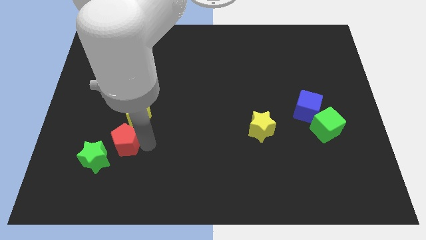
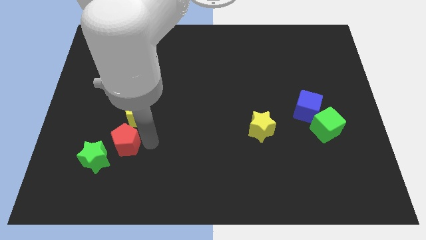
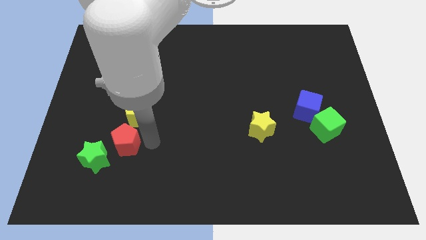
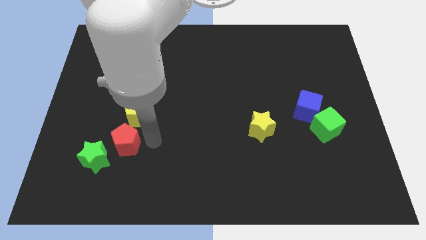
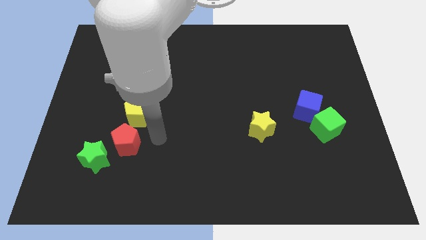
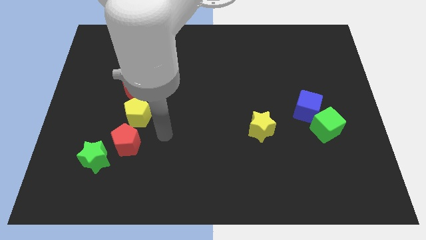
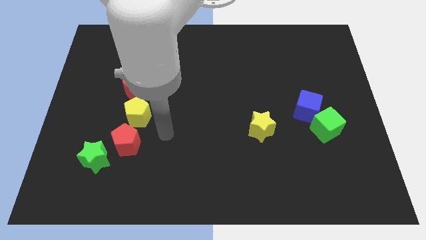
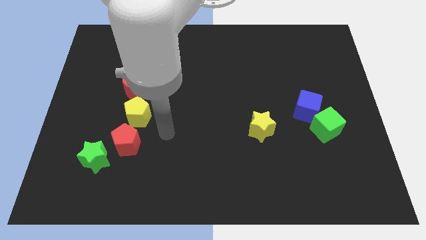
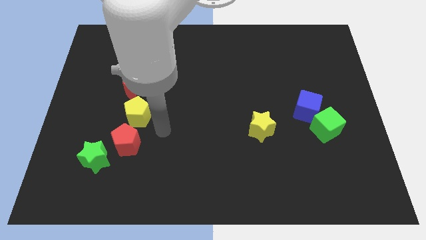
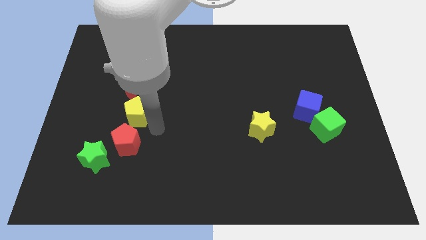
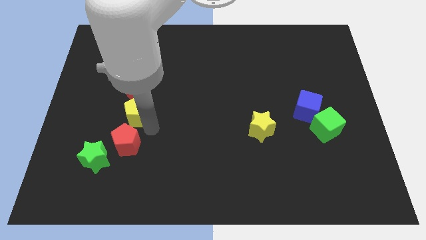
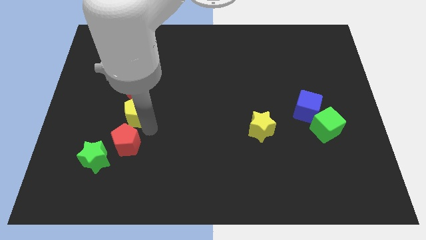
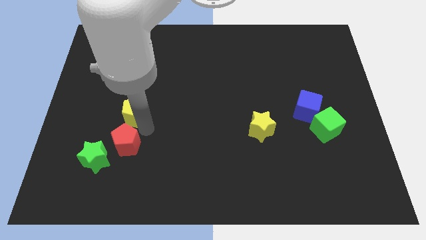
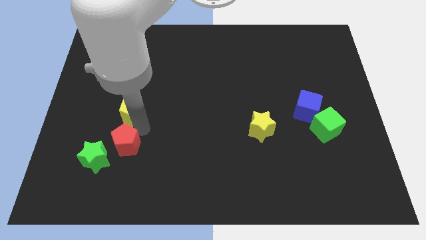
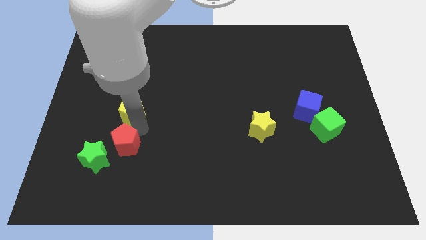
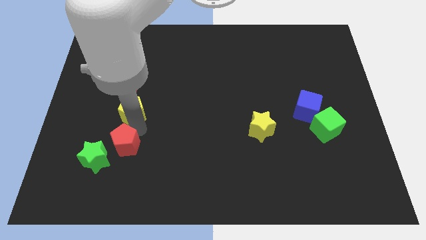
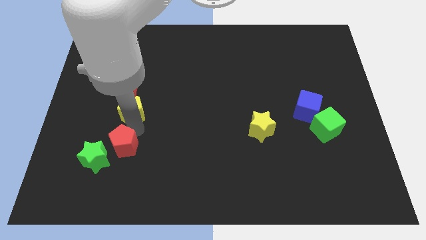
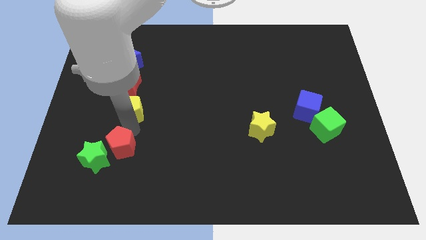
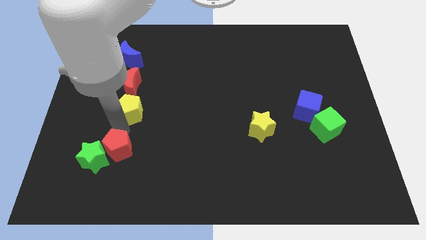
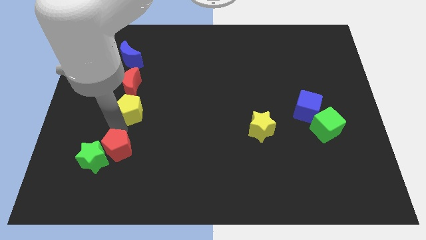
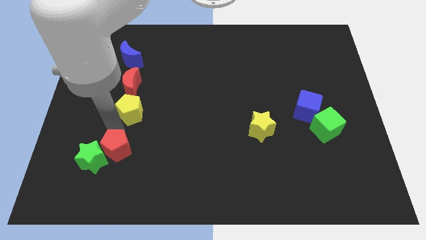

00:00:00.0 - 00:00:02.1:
place red pentagon to the top right of green star

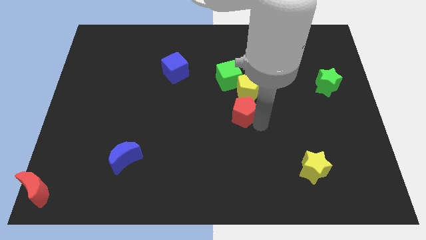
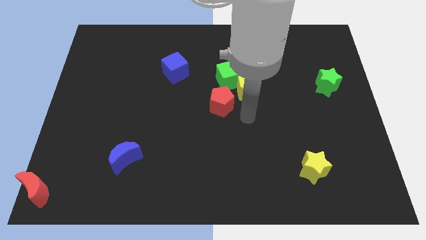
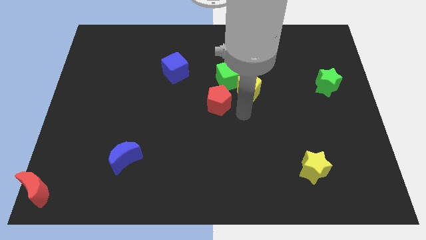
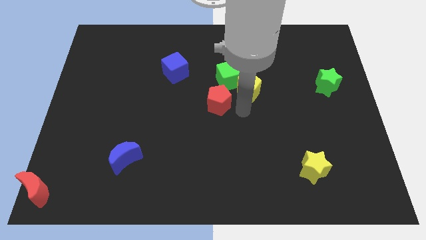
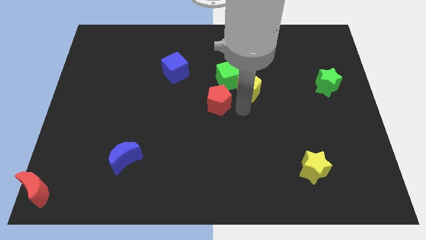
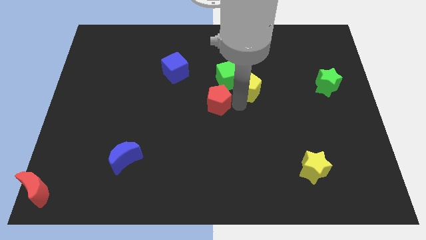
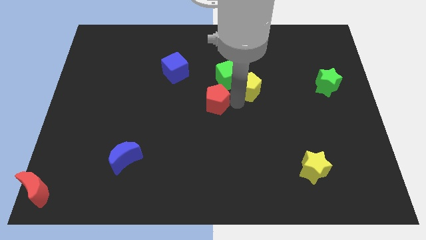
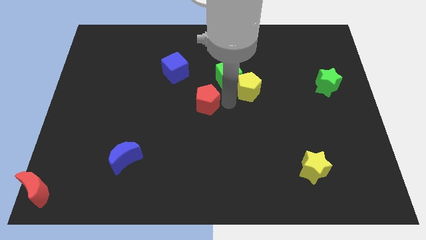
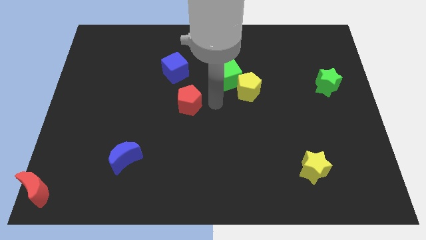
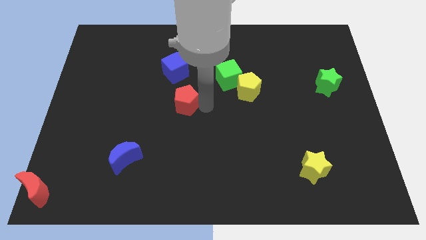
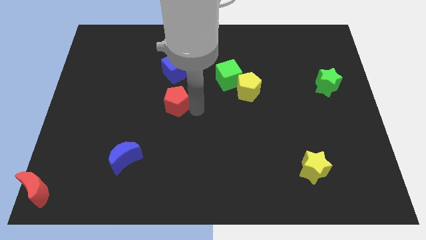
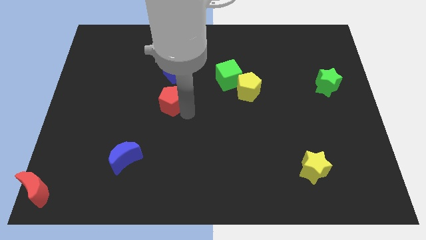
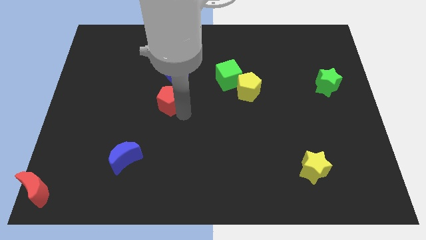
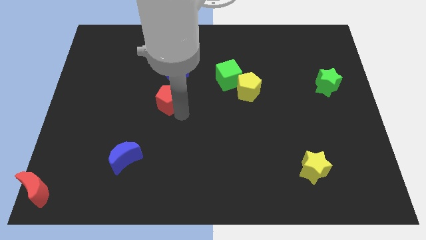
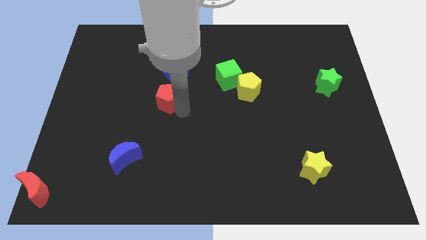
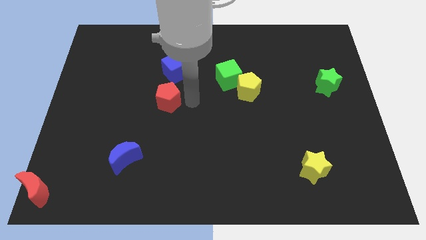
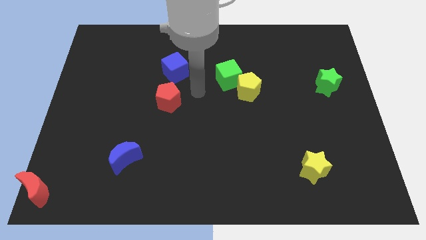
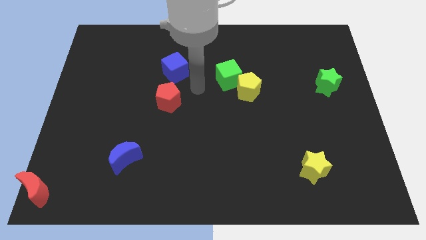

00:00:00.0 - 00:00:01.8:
move the red pentagon to the bottom of the blue cube

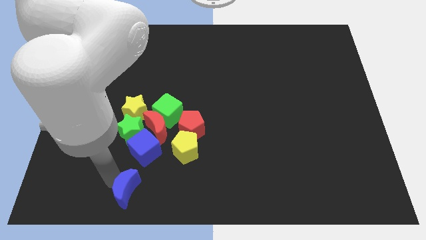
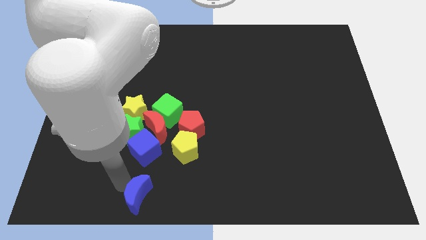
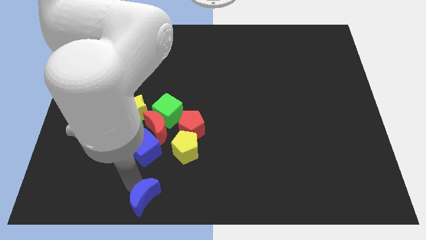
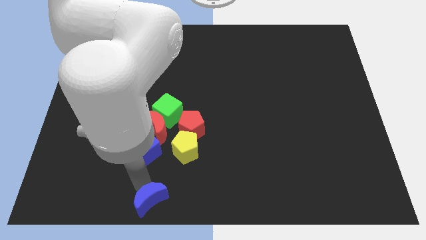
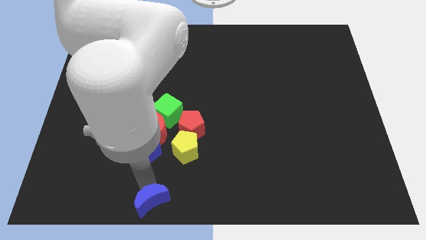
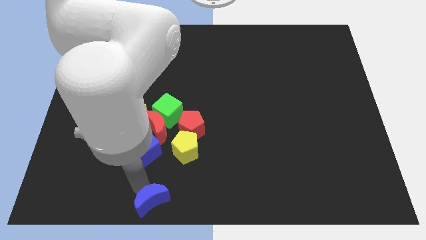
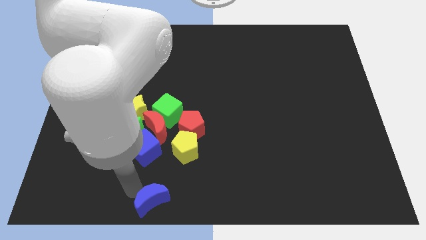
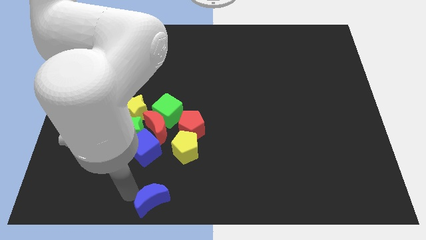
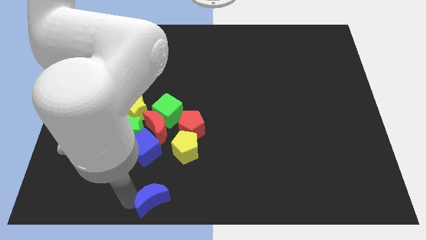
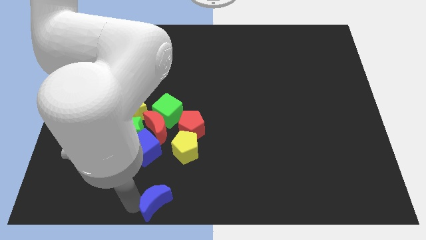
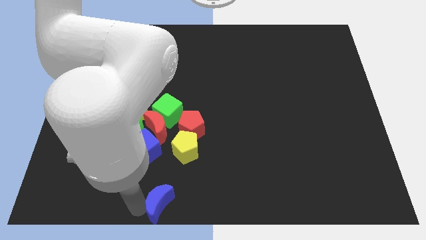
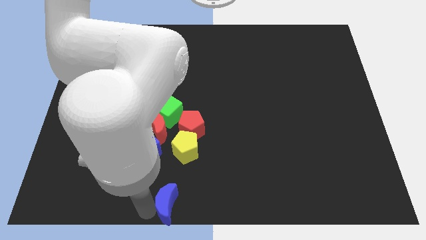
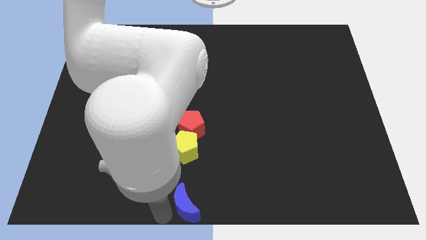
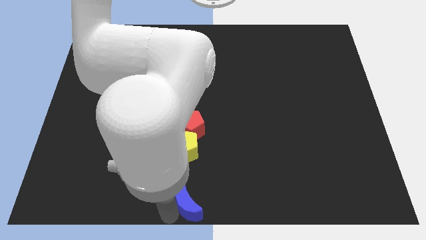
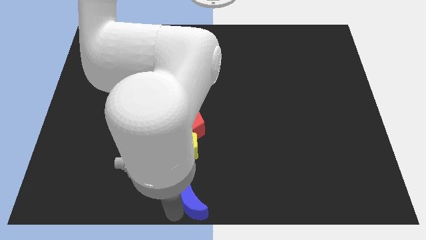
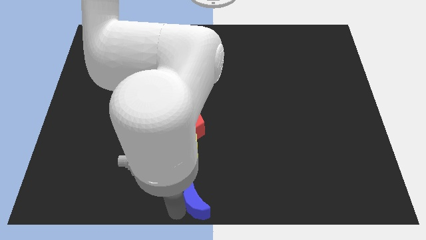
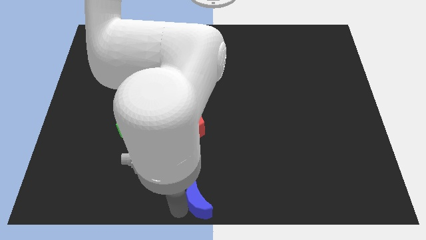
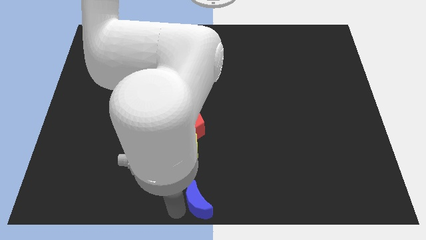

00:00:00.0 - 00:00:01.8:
slide the blue crescent to the bottom center of the board

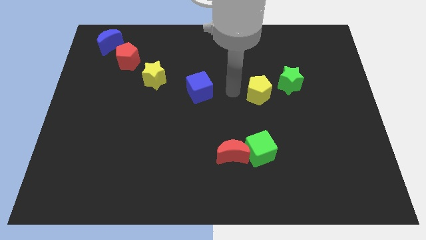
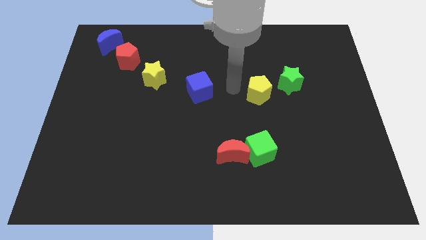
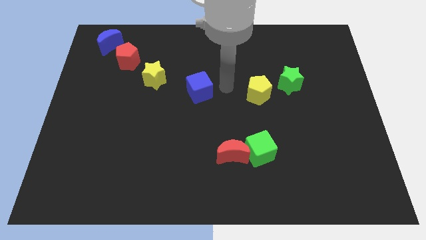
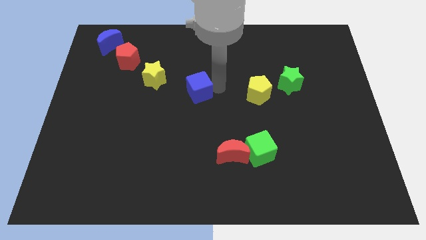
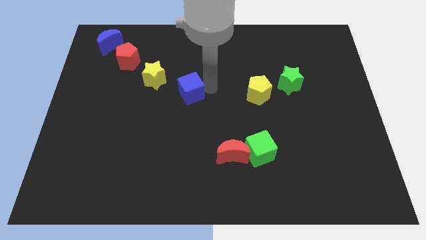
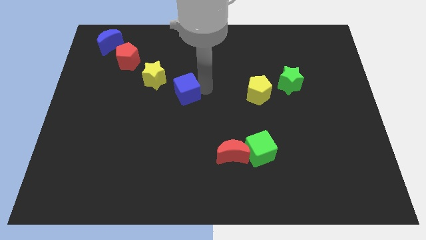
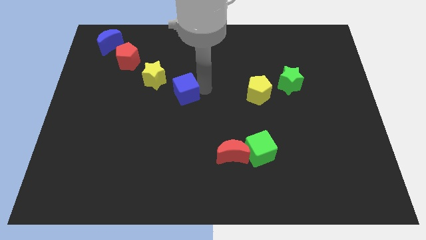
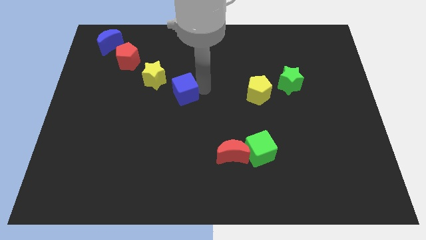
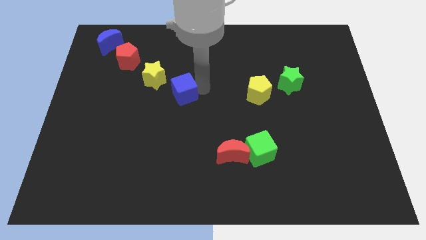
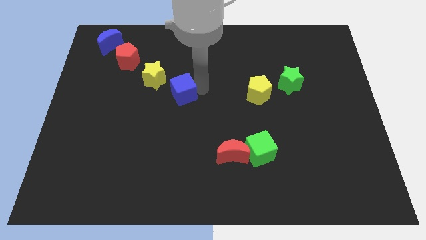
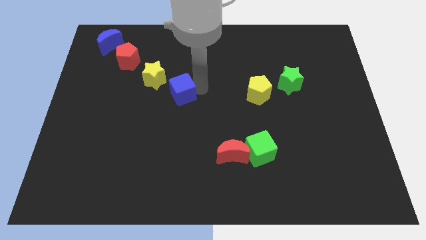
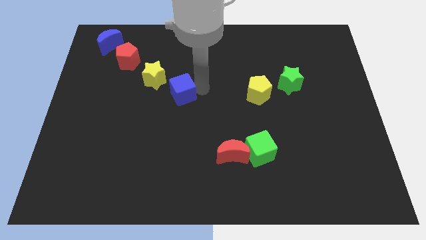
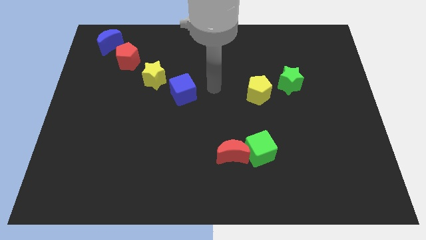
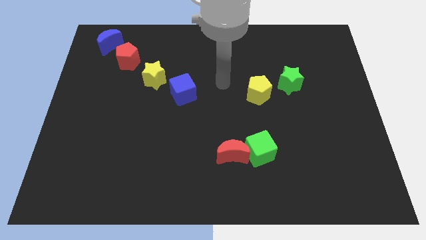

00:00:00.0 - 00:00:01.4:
slightly push the blue cube to the left side

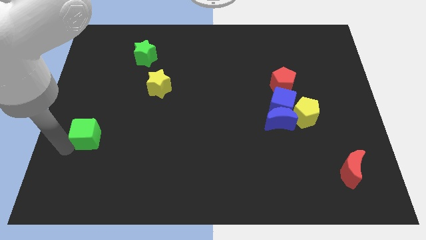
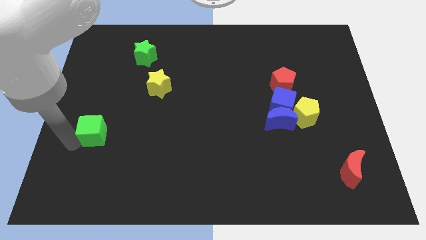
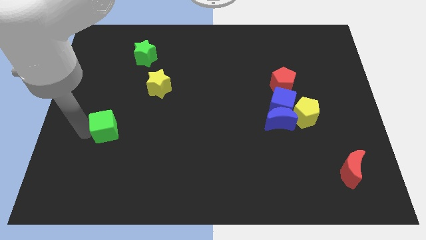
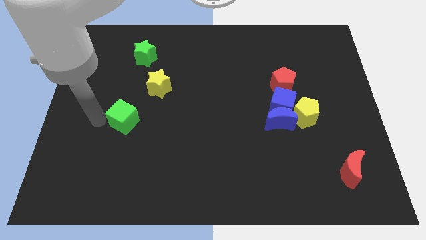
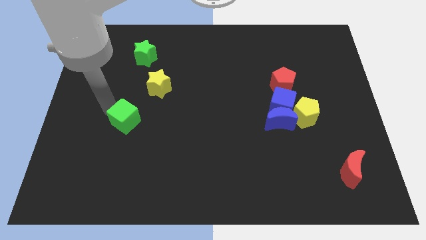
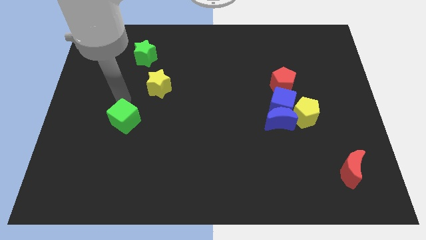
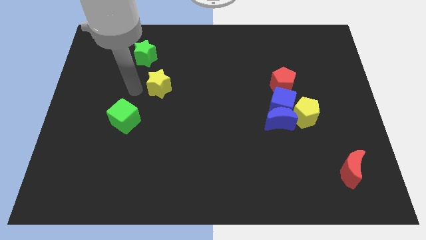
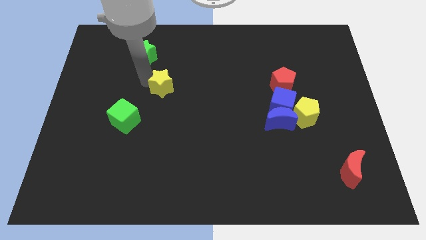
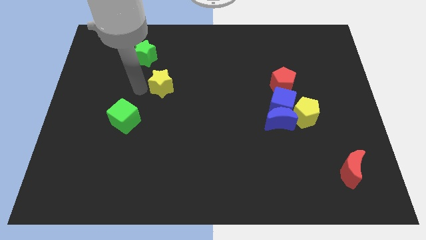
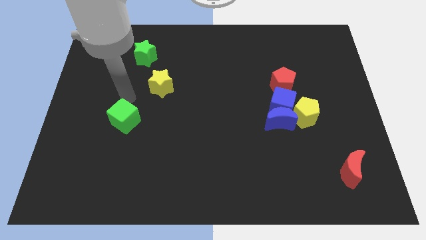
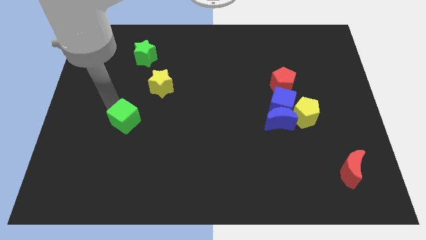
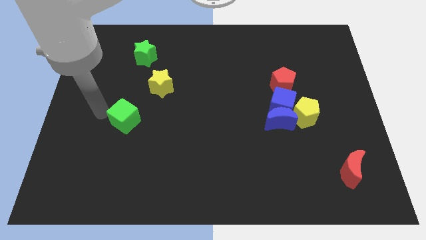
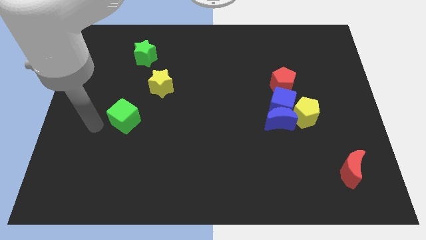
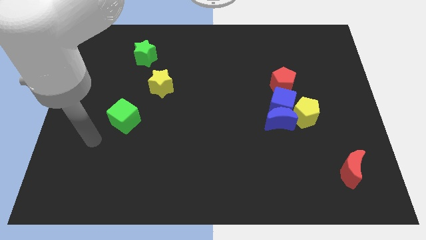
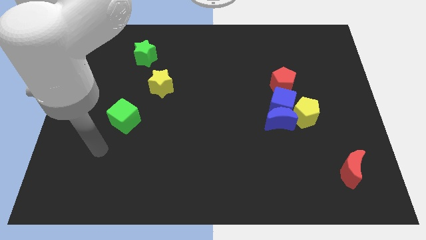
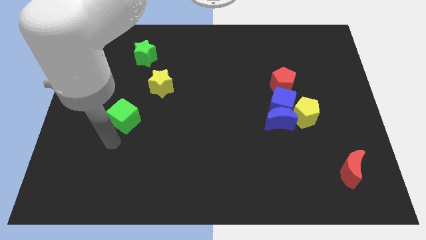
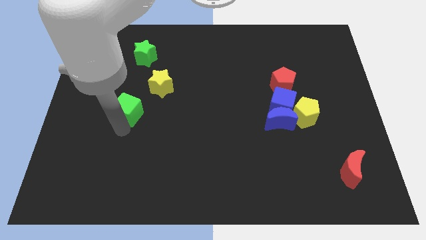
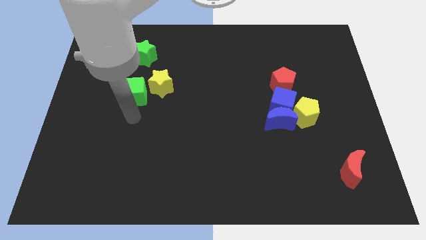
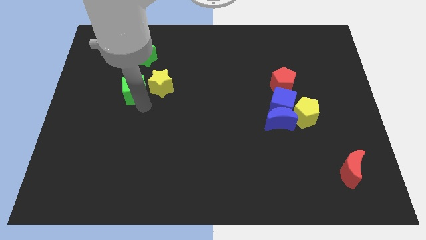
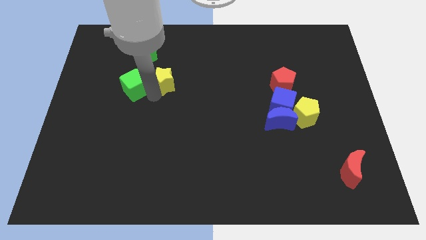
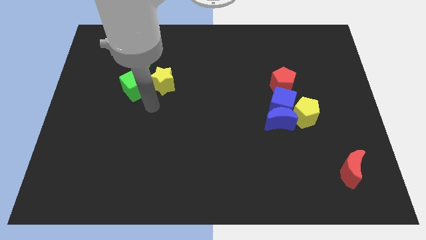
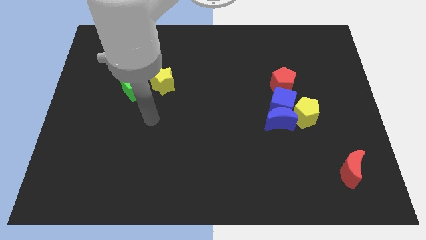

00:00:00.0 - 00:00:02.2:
place green block left to yellow star
